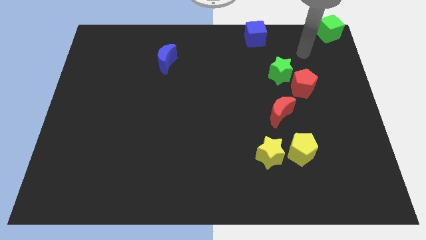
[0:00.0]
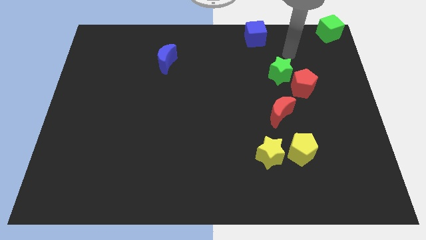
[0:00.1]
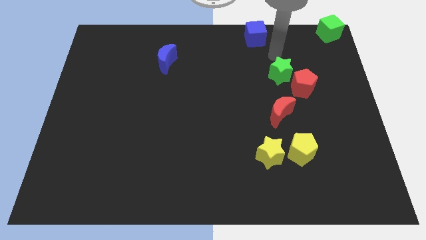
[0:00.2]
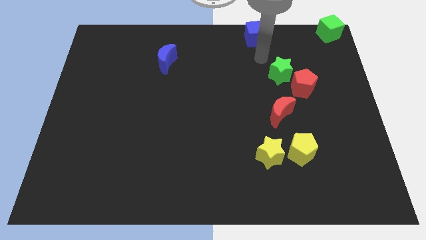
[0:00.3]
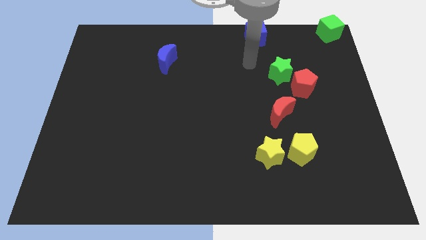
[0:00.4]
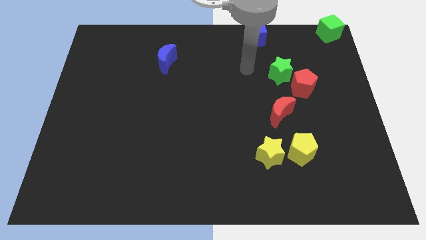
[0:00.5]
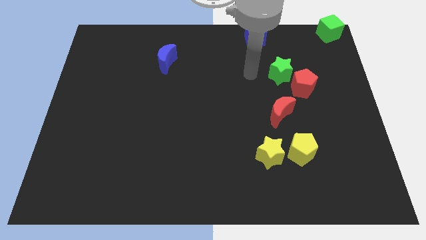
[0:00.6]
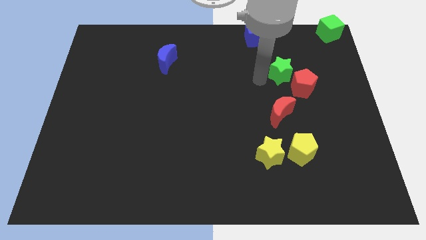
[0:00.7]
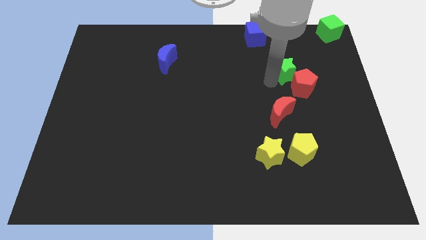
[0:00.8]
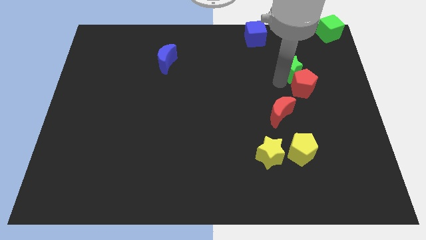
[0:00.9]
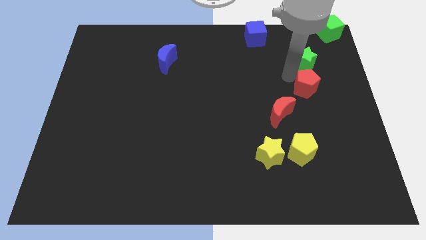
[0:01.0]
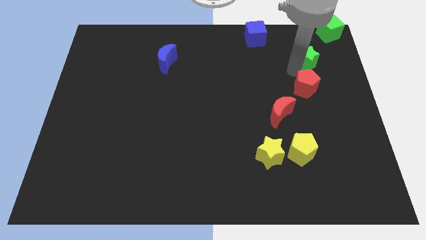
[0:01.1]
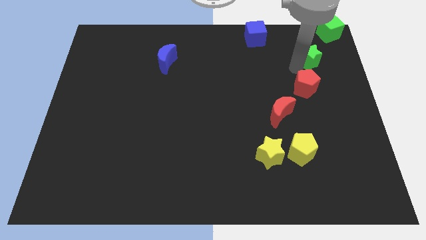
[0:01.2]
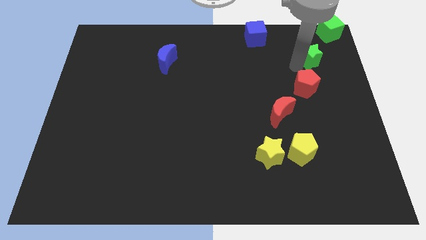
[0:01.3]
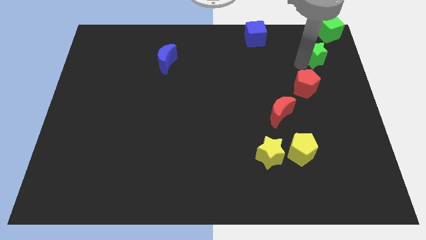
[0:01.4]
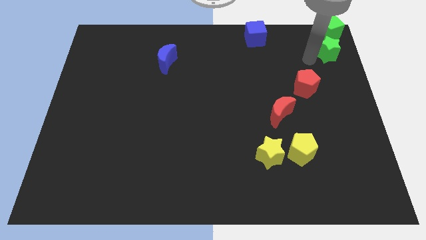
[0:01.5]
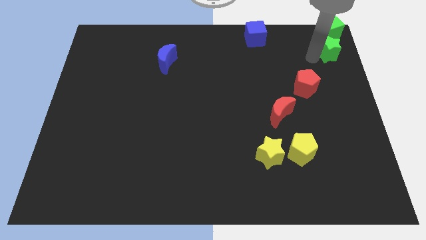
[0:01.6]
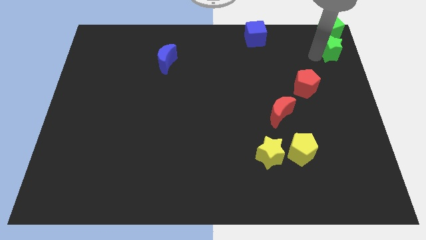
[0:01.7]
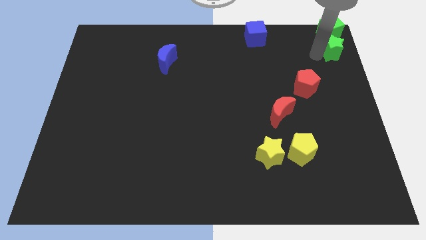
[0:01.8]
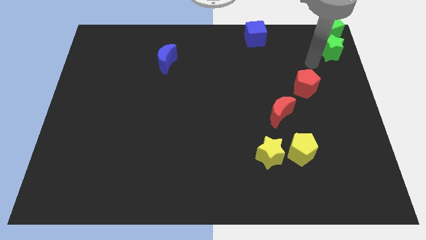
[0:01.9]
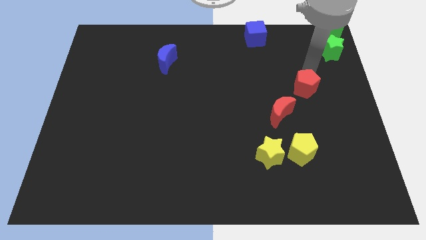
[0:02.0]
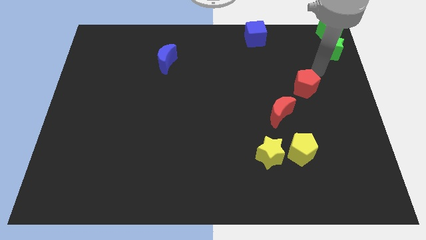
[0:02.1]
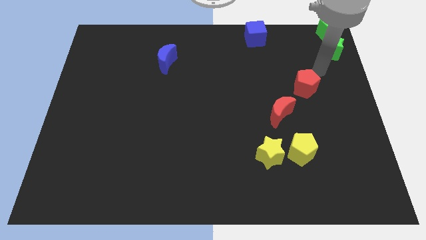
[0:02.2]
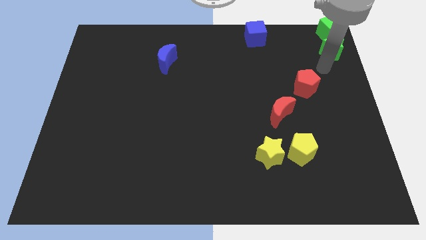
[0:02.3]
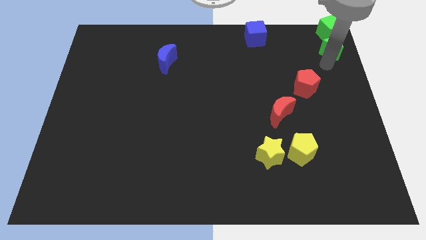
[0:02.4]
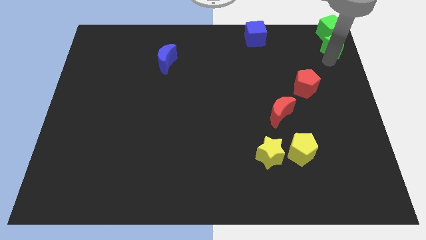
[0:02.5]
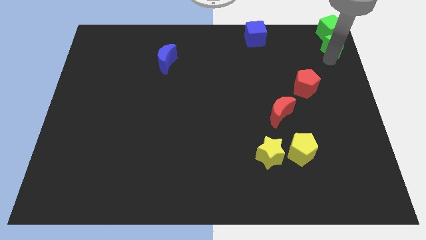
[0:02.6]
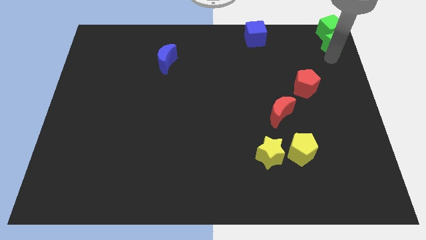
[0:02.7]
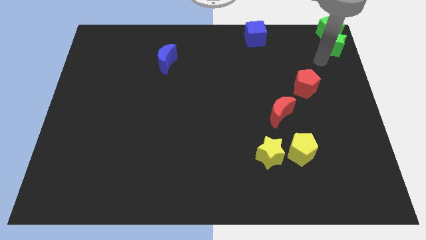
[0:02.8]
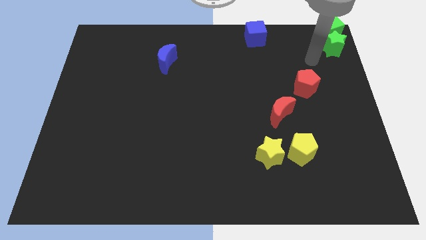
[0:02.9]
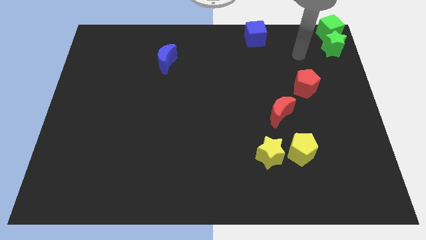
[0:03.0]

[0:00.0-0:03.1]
group up the green blocks at the top right corner

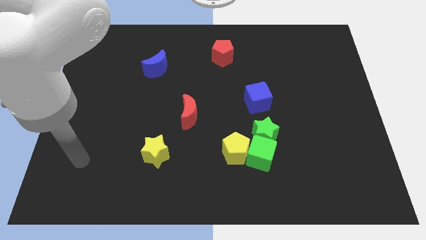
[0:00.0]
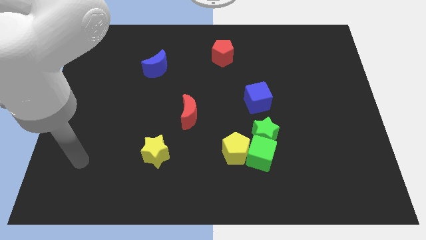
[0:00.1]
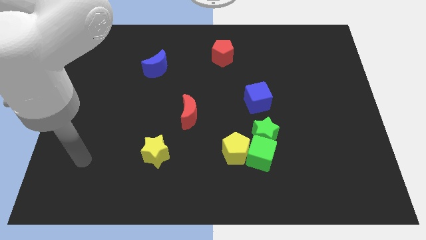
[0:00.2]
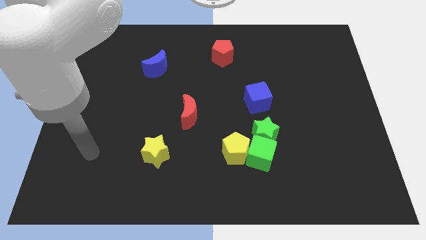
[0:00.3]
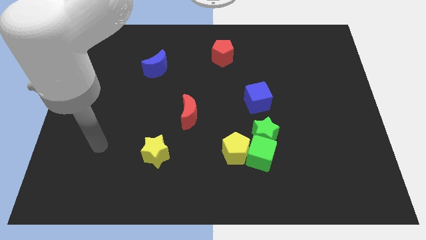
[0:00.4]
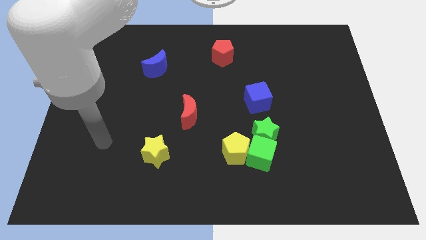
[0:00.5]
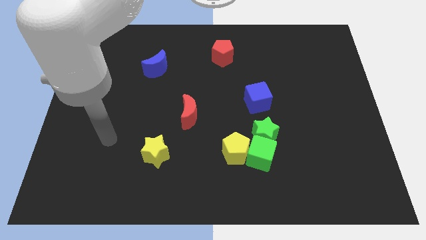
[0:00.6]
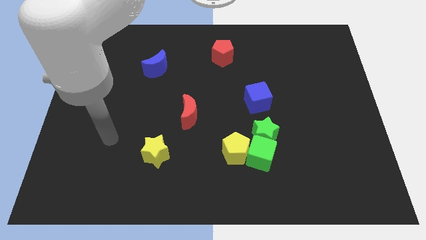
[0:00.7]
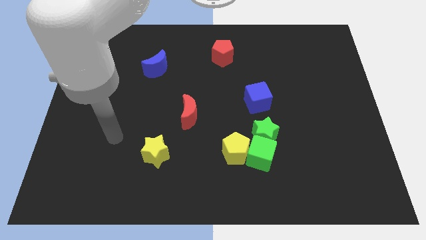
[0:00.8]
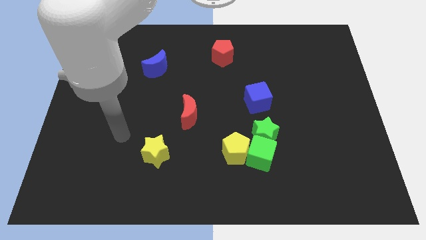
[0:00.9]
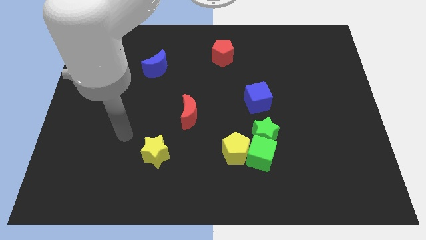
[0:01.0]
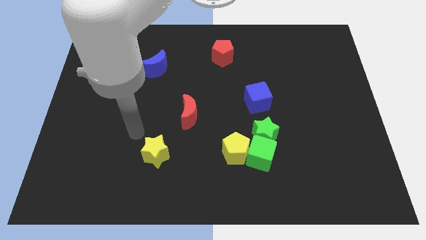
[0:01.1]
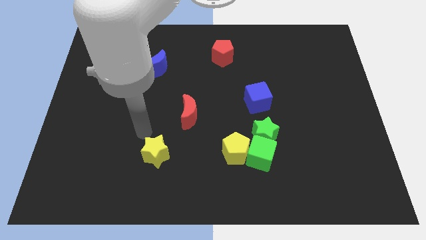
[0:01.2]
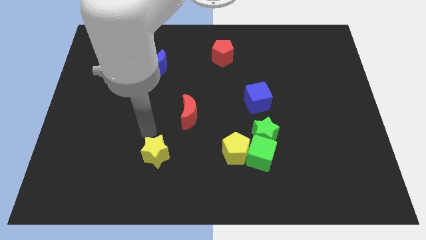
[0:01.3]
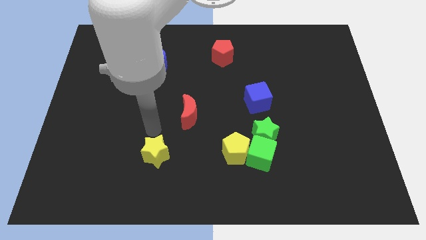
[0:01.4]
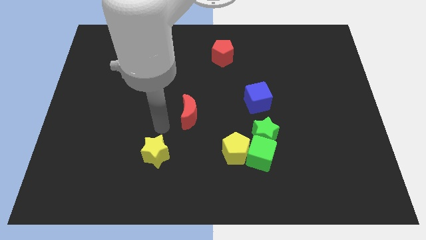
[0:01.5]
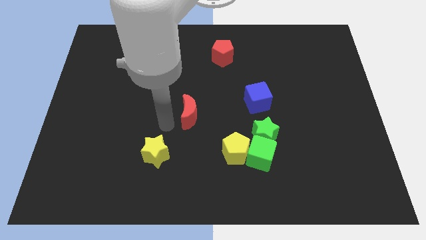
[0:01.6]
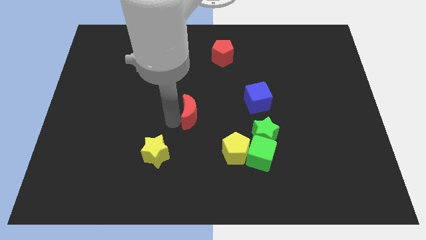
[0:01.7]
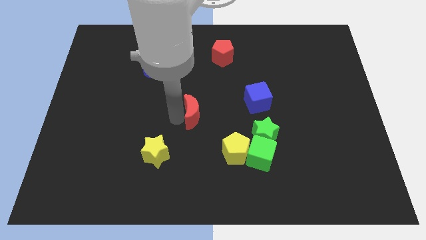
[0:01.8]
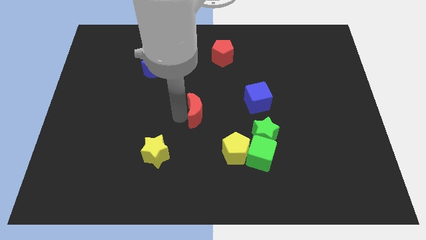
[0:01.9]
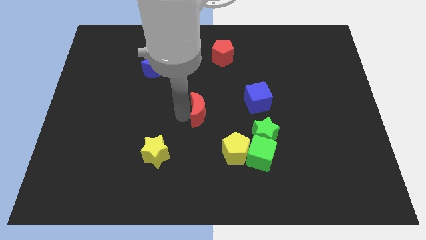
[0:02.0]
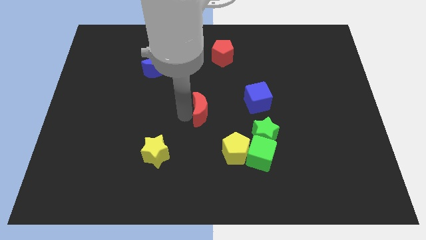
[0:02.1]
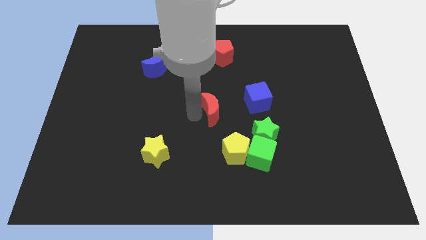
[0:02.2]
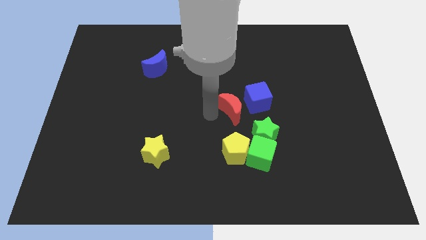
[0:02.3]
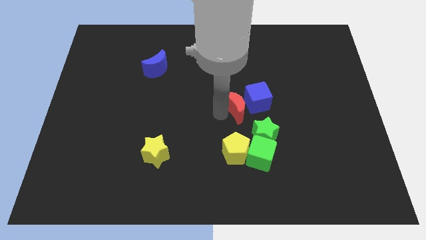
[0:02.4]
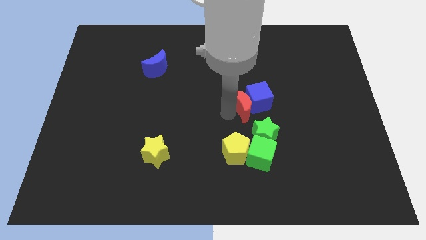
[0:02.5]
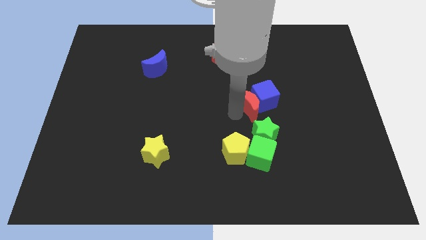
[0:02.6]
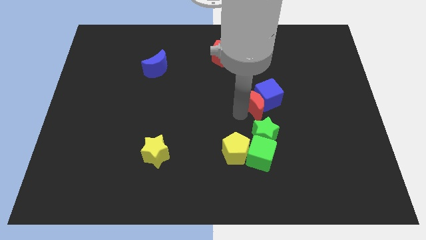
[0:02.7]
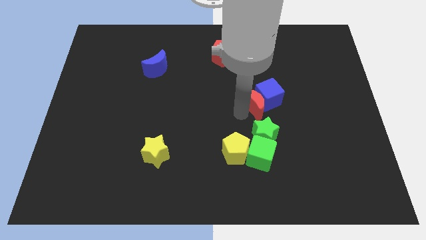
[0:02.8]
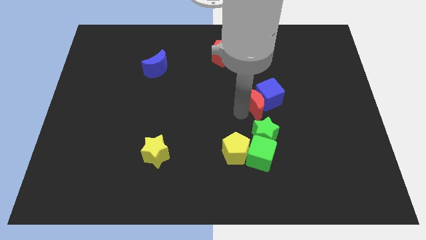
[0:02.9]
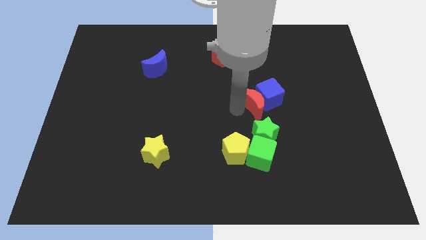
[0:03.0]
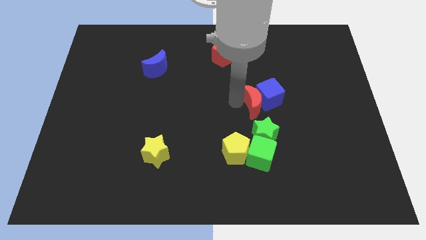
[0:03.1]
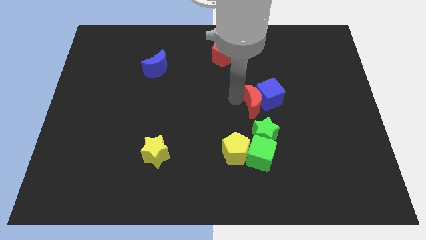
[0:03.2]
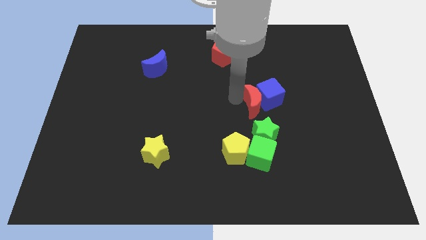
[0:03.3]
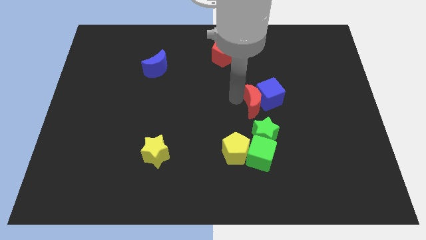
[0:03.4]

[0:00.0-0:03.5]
push the red moon into the blue cube

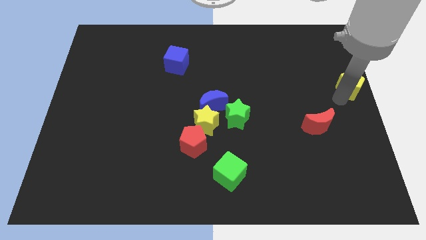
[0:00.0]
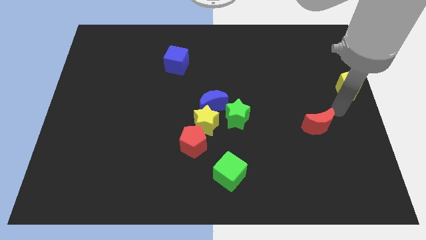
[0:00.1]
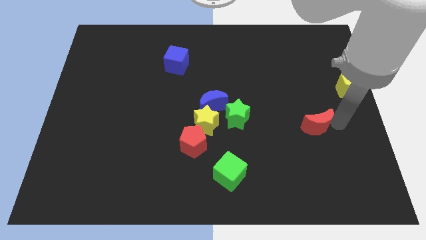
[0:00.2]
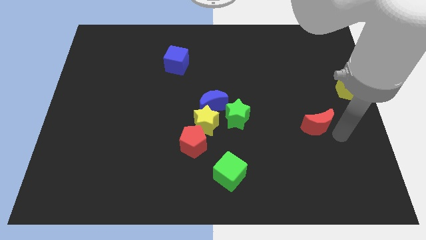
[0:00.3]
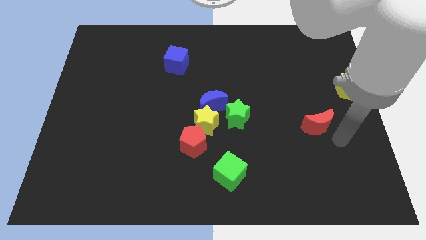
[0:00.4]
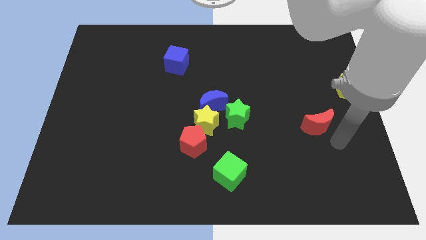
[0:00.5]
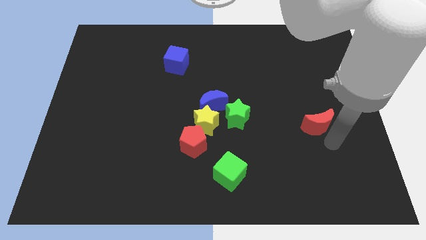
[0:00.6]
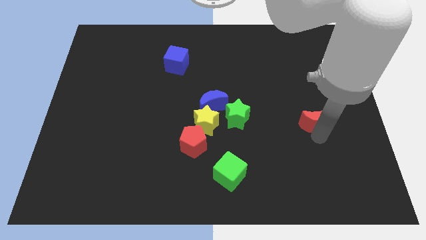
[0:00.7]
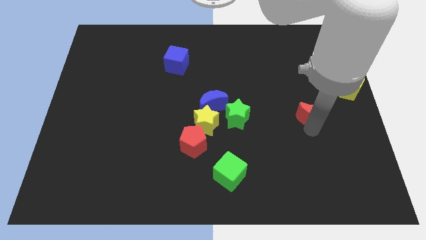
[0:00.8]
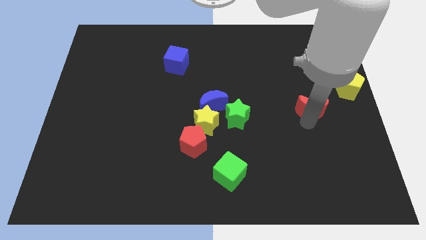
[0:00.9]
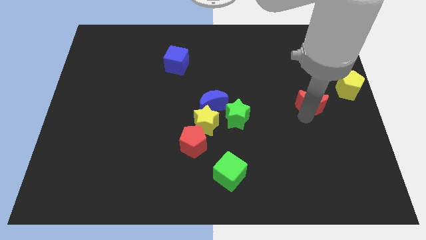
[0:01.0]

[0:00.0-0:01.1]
move the red crescent slightly up

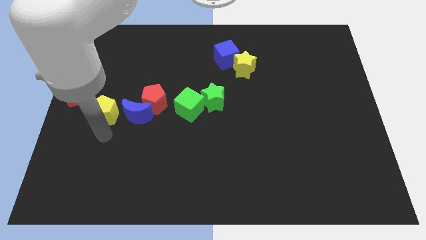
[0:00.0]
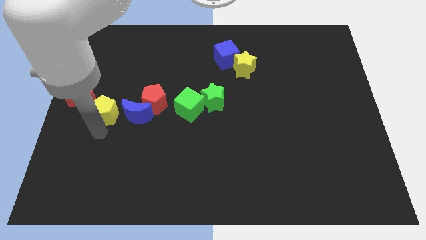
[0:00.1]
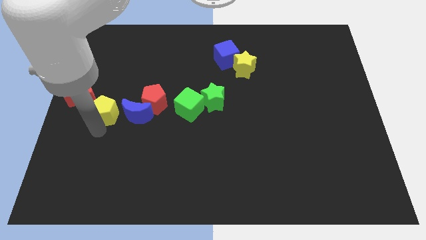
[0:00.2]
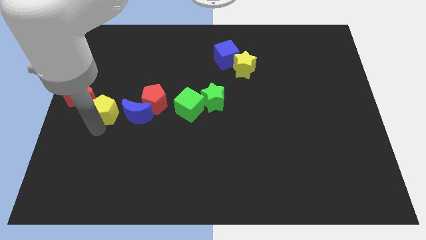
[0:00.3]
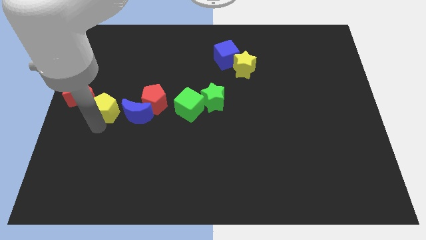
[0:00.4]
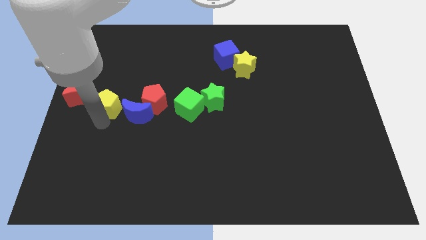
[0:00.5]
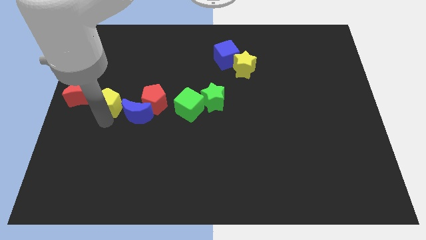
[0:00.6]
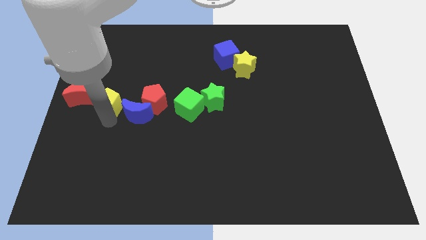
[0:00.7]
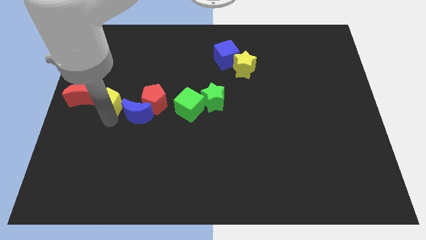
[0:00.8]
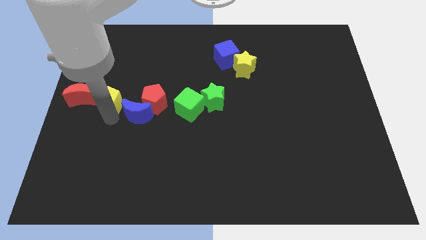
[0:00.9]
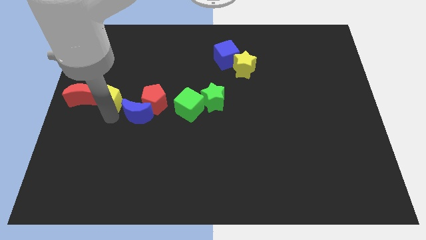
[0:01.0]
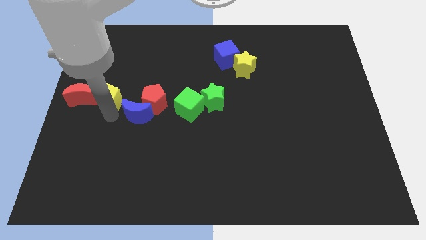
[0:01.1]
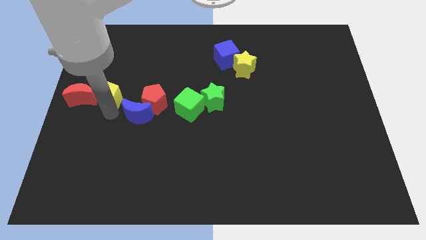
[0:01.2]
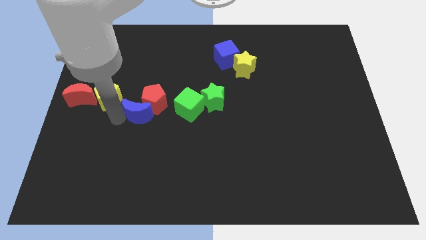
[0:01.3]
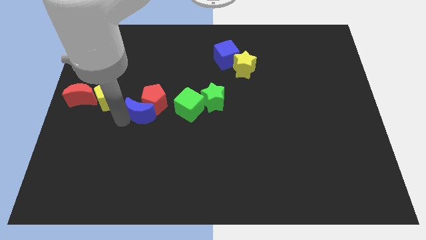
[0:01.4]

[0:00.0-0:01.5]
move the yellow pentagon to the right of the red moon
